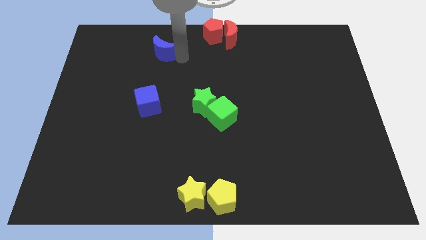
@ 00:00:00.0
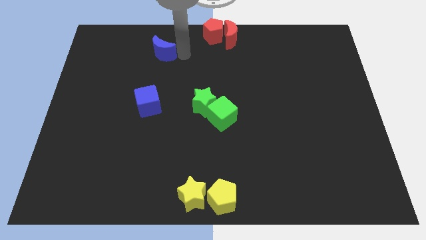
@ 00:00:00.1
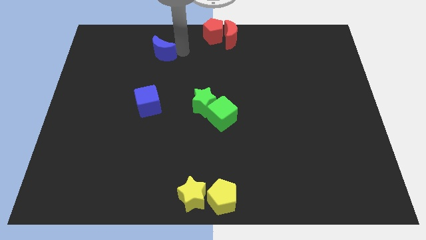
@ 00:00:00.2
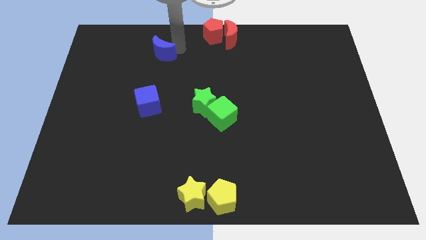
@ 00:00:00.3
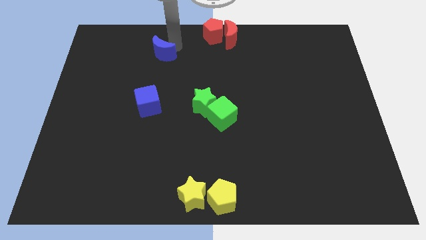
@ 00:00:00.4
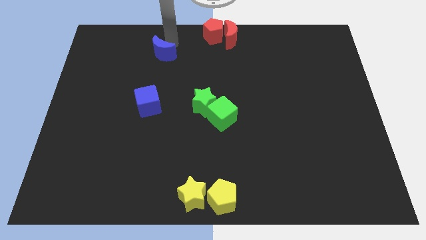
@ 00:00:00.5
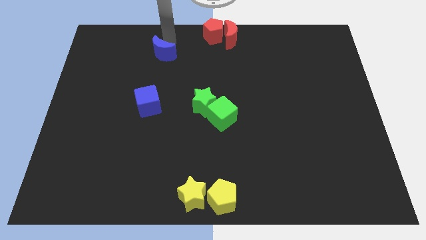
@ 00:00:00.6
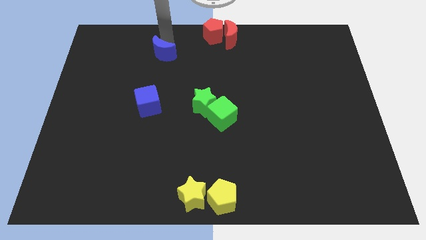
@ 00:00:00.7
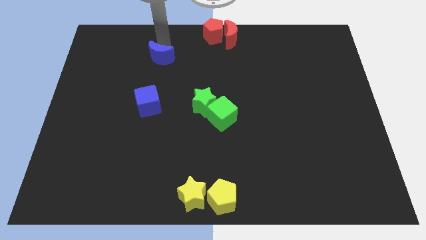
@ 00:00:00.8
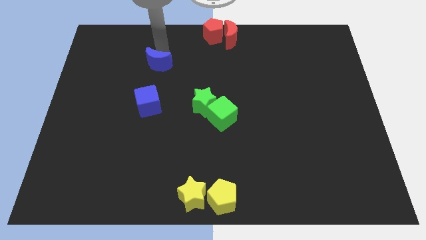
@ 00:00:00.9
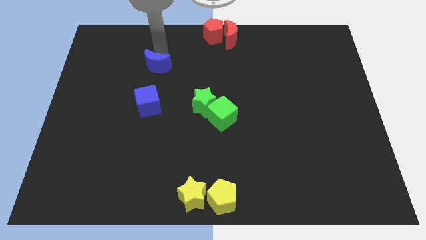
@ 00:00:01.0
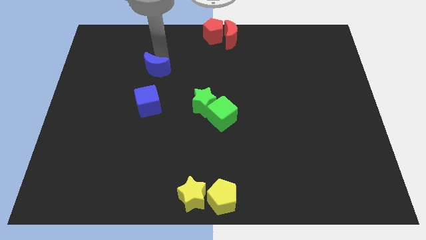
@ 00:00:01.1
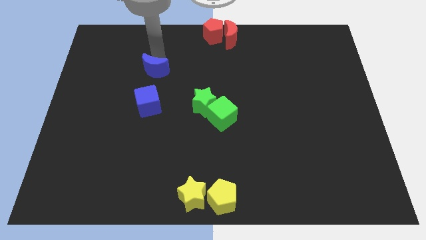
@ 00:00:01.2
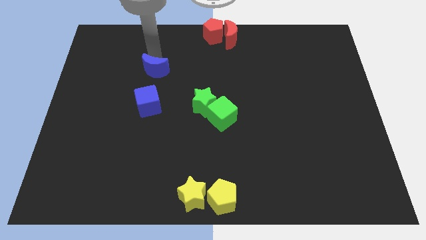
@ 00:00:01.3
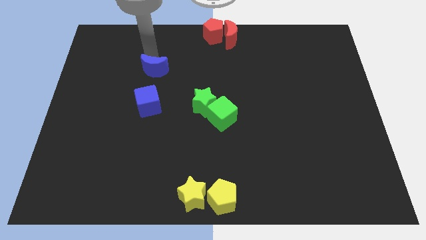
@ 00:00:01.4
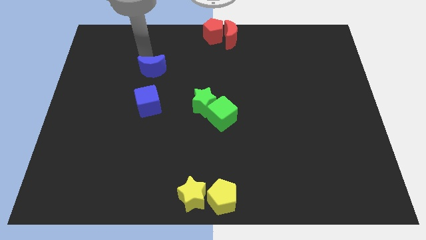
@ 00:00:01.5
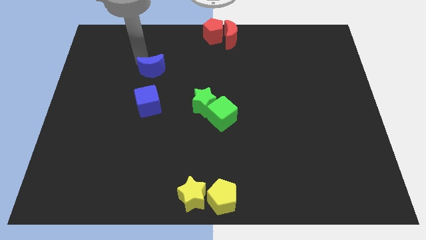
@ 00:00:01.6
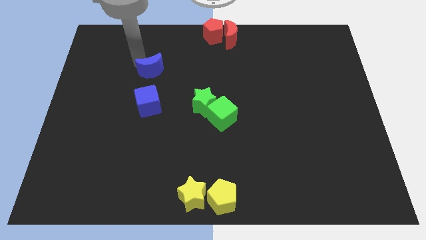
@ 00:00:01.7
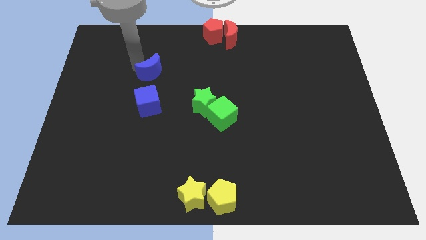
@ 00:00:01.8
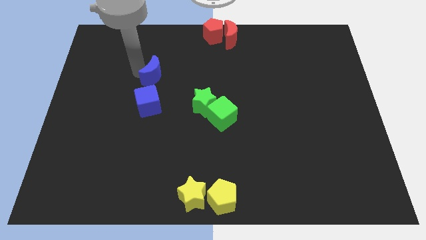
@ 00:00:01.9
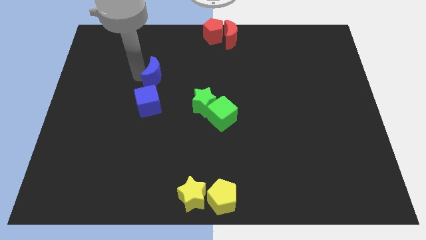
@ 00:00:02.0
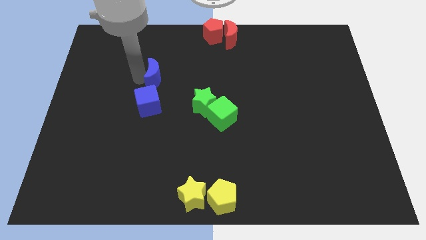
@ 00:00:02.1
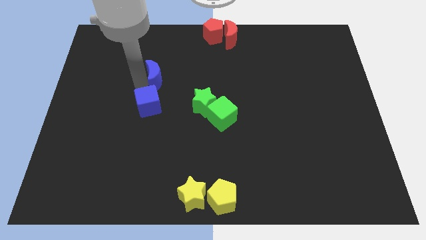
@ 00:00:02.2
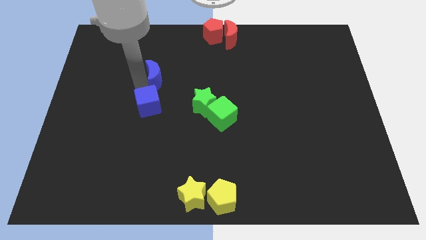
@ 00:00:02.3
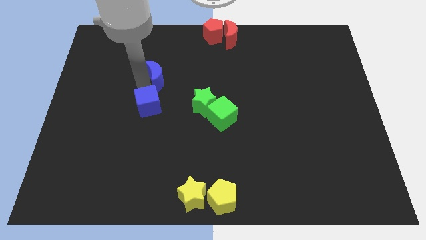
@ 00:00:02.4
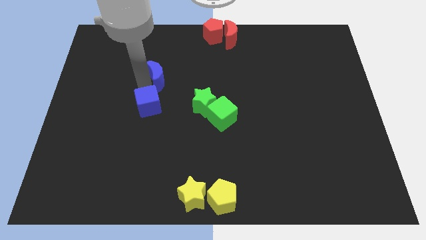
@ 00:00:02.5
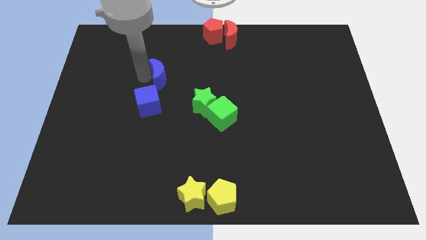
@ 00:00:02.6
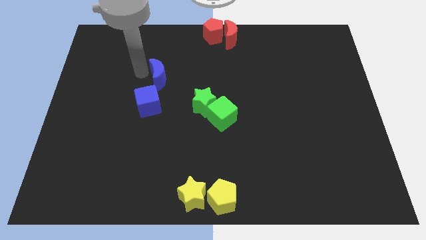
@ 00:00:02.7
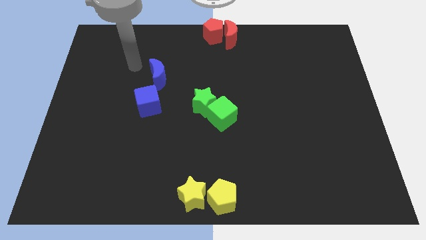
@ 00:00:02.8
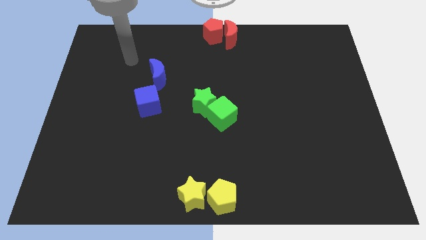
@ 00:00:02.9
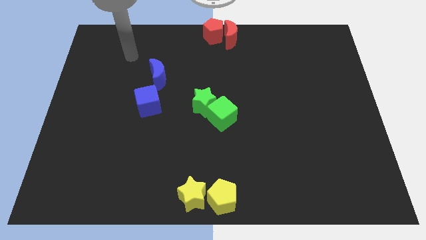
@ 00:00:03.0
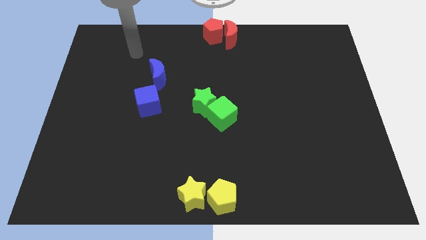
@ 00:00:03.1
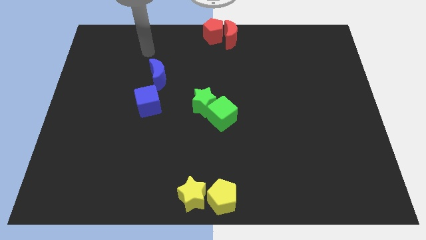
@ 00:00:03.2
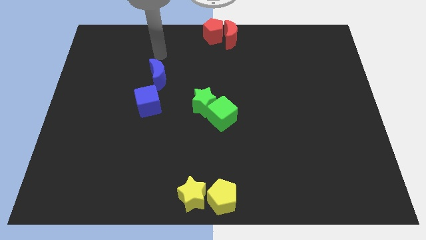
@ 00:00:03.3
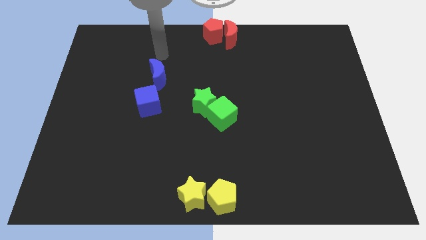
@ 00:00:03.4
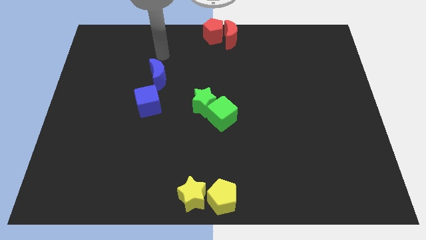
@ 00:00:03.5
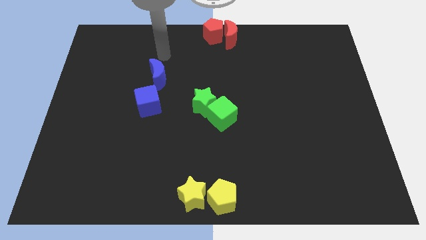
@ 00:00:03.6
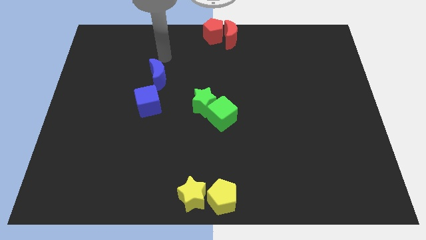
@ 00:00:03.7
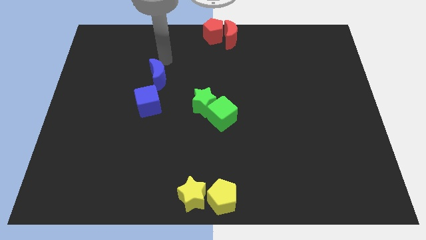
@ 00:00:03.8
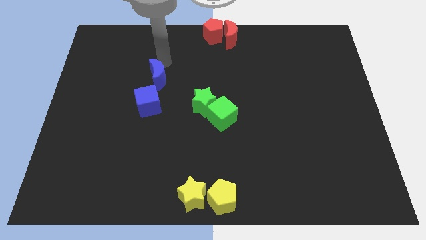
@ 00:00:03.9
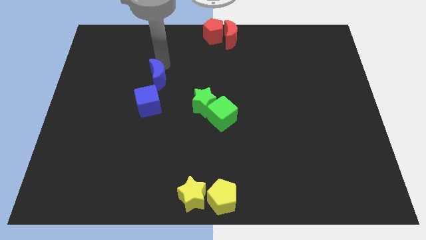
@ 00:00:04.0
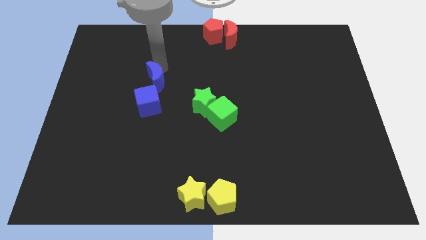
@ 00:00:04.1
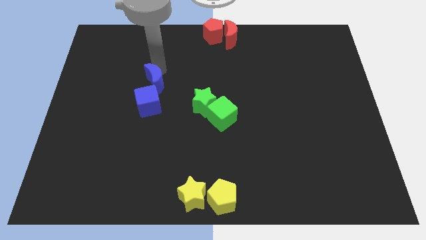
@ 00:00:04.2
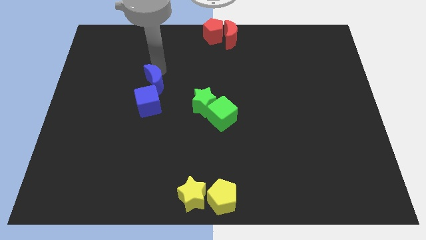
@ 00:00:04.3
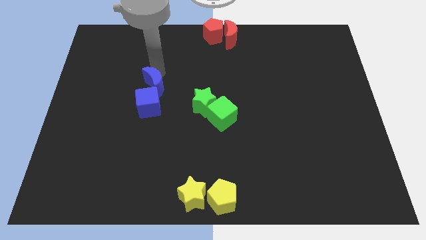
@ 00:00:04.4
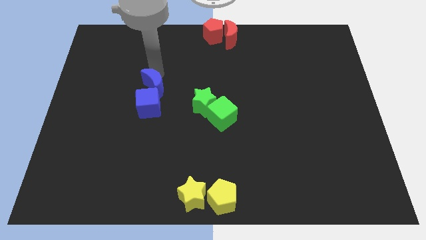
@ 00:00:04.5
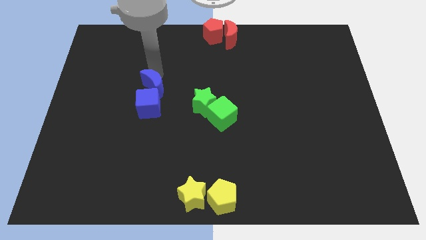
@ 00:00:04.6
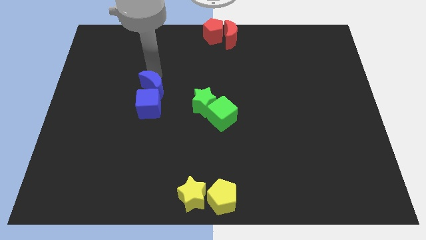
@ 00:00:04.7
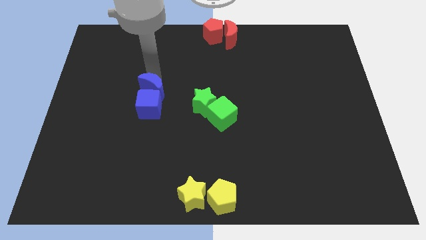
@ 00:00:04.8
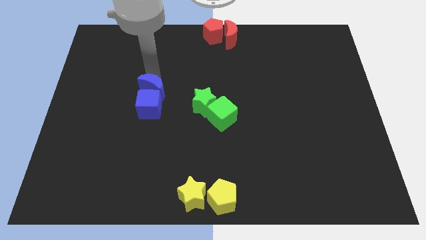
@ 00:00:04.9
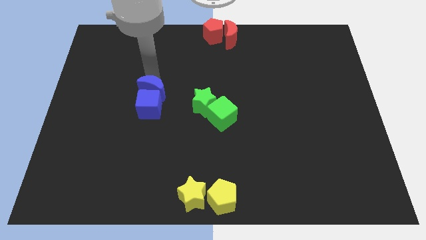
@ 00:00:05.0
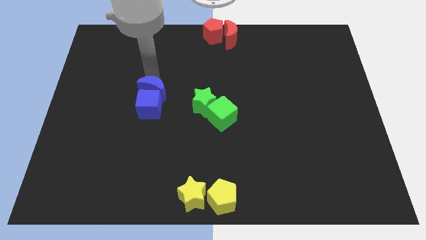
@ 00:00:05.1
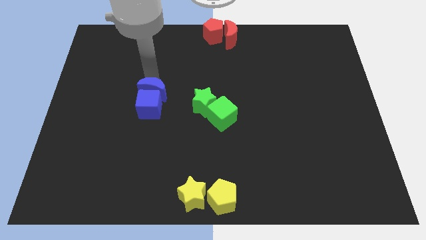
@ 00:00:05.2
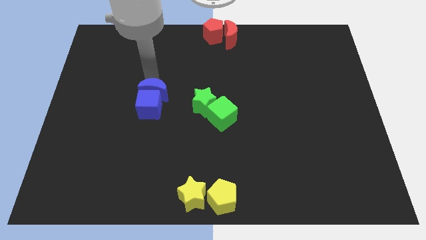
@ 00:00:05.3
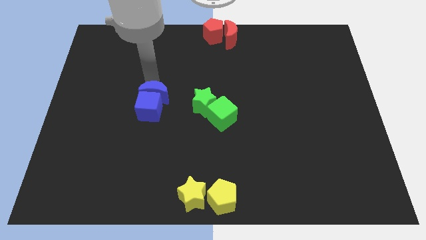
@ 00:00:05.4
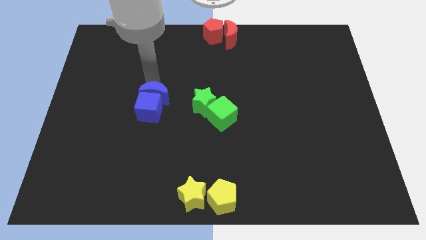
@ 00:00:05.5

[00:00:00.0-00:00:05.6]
move the blue crescent to the top of the blue cube

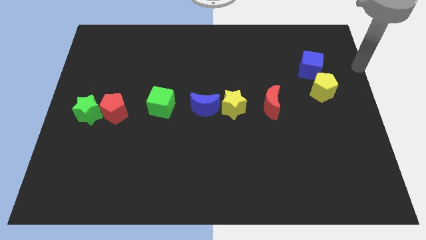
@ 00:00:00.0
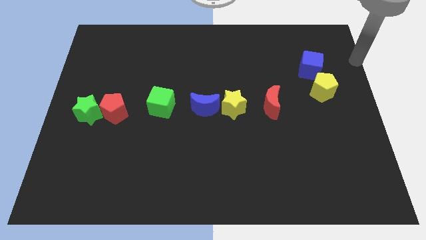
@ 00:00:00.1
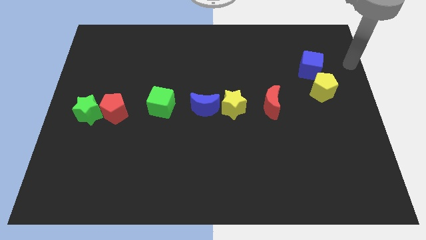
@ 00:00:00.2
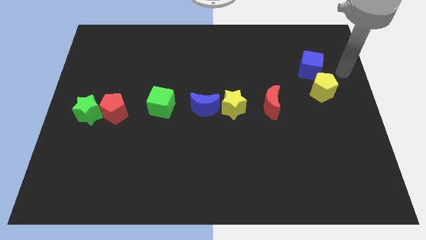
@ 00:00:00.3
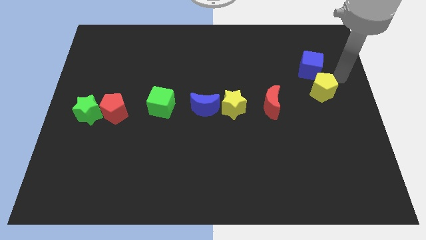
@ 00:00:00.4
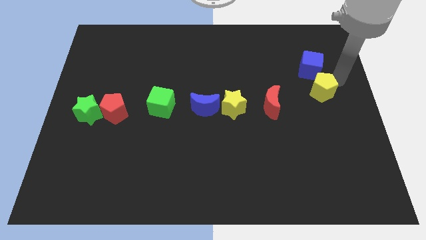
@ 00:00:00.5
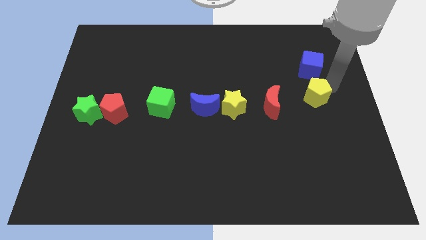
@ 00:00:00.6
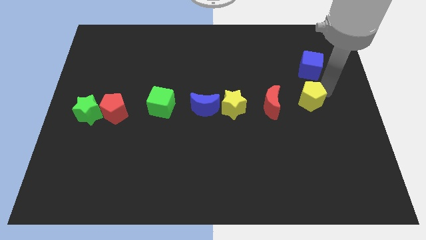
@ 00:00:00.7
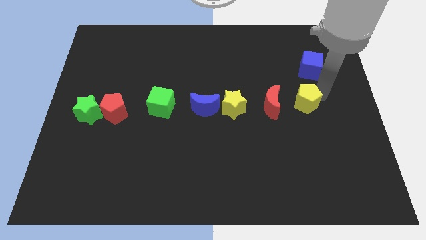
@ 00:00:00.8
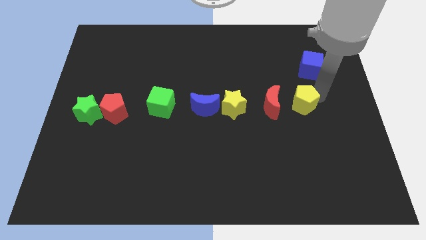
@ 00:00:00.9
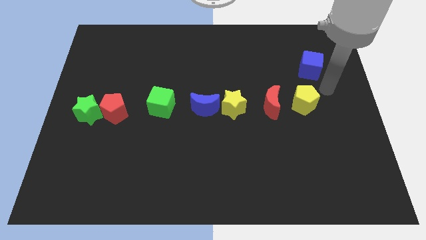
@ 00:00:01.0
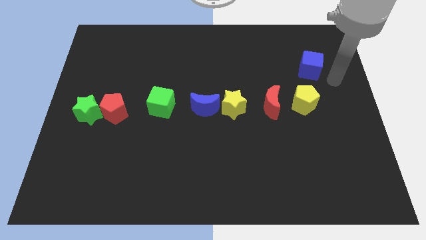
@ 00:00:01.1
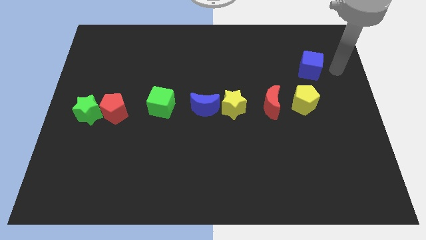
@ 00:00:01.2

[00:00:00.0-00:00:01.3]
separate yellow pentagon from the blue cube

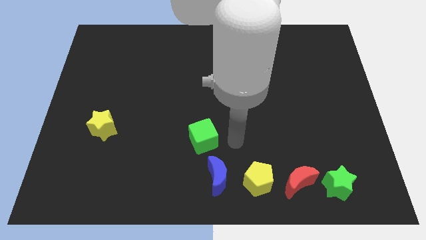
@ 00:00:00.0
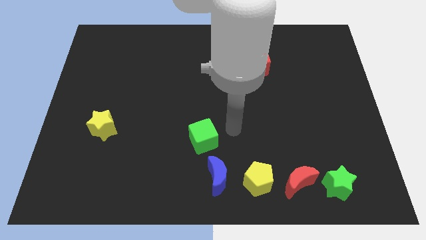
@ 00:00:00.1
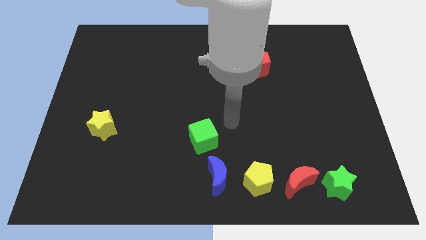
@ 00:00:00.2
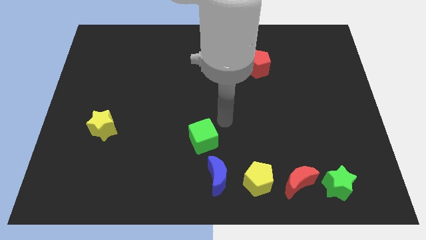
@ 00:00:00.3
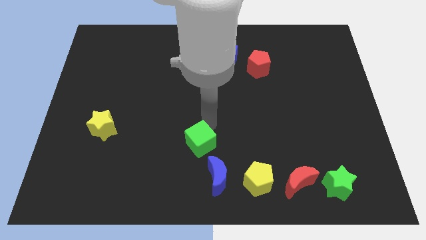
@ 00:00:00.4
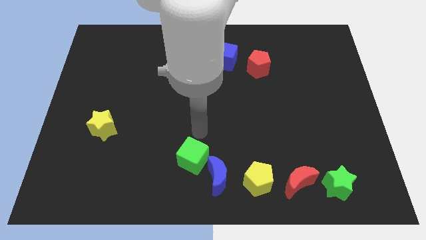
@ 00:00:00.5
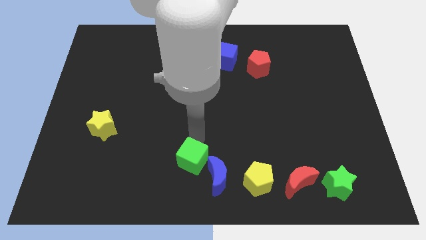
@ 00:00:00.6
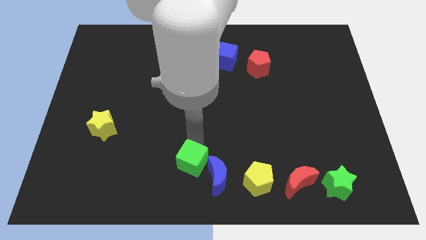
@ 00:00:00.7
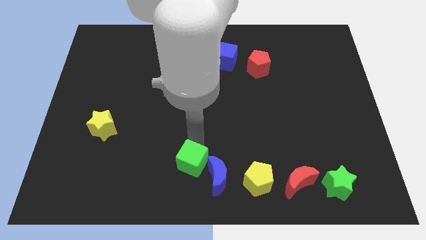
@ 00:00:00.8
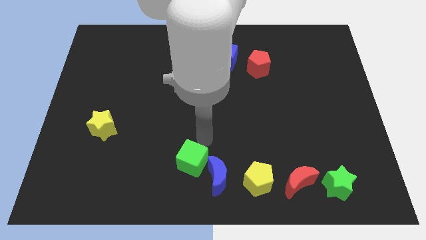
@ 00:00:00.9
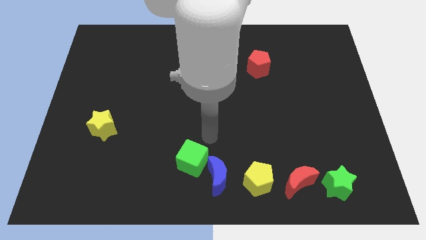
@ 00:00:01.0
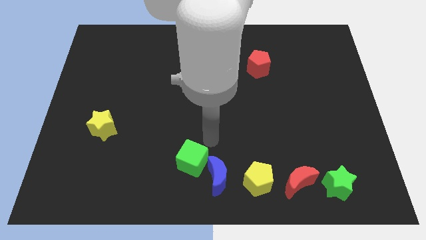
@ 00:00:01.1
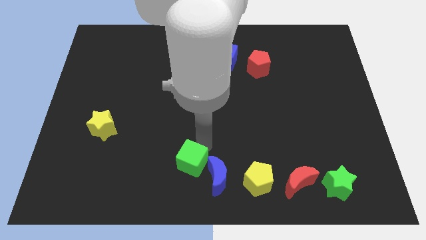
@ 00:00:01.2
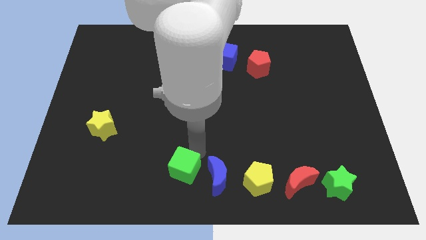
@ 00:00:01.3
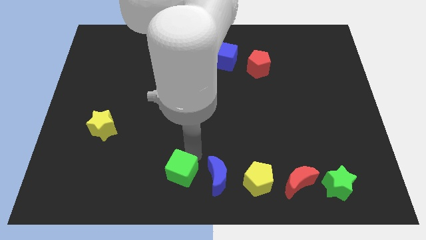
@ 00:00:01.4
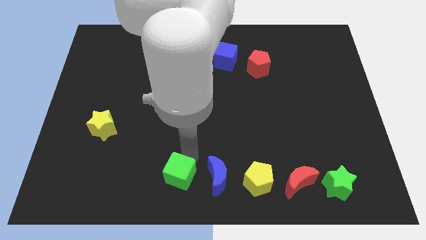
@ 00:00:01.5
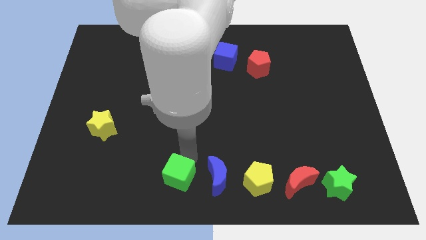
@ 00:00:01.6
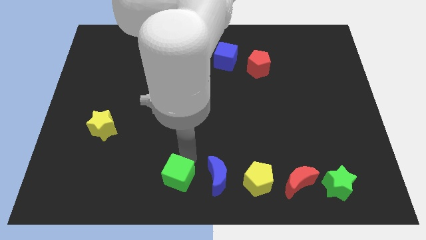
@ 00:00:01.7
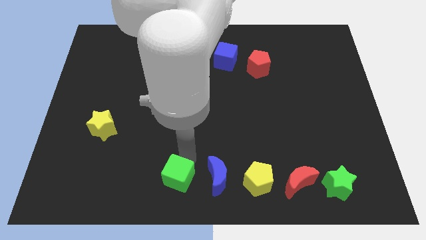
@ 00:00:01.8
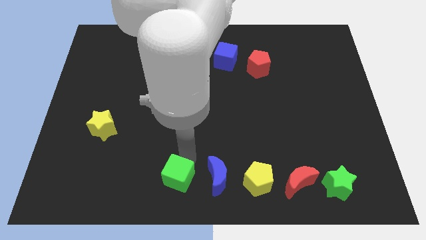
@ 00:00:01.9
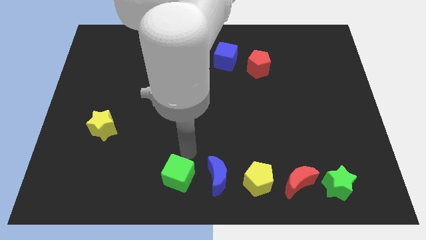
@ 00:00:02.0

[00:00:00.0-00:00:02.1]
move the green cube to the left of blue moon
